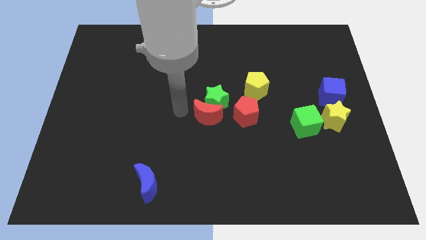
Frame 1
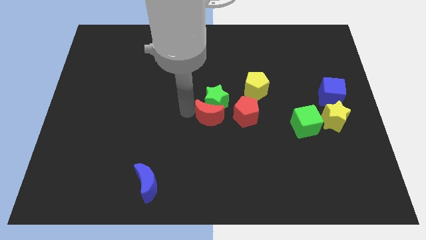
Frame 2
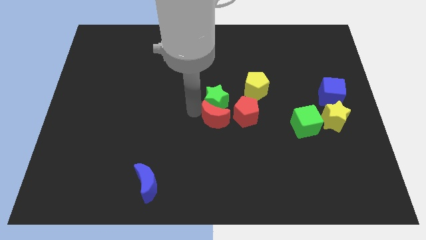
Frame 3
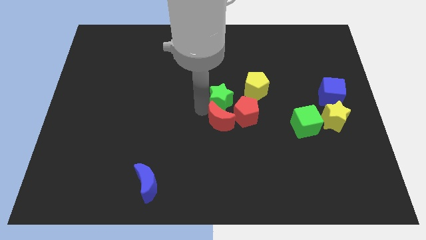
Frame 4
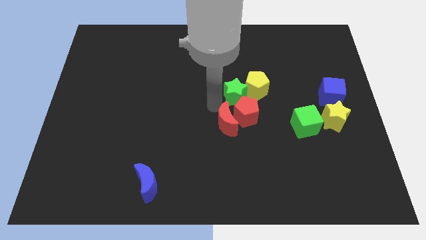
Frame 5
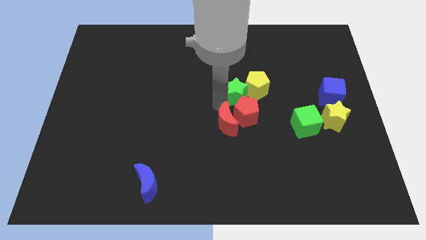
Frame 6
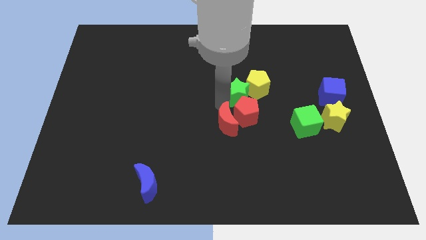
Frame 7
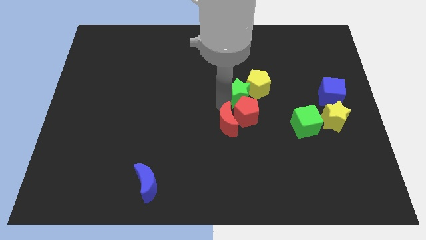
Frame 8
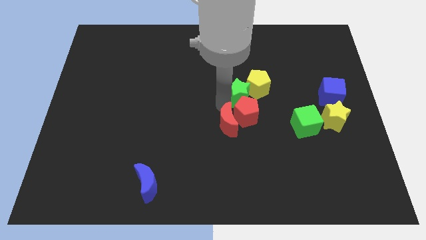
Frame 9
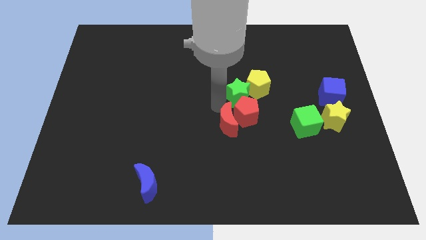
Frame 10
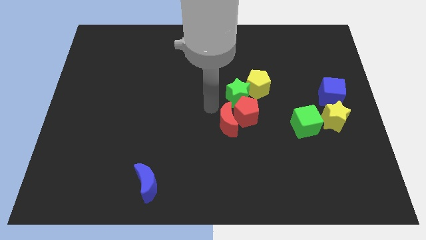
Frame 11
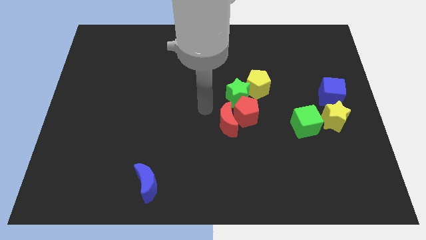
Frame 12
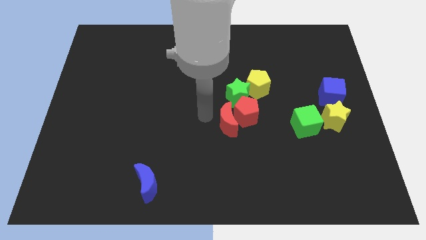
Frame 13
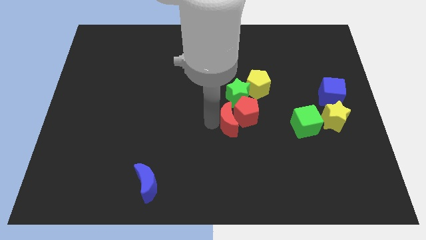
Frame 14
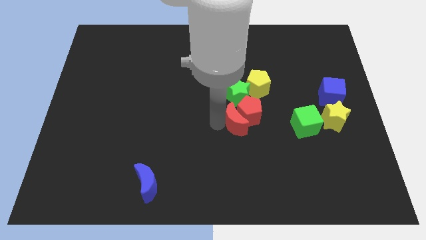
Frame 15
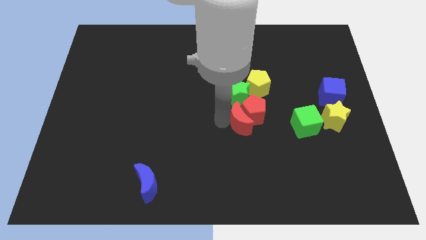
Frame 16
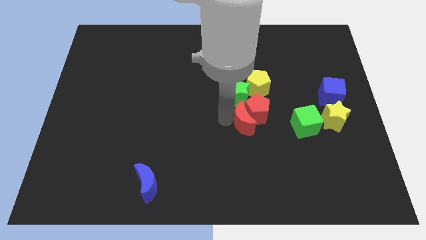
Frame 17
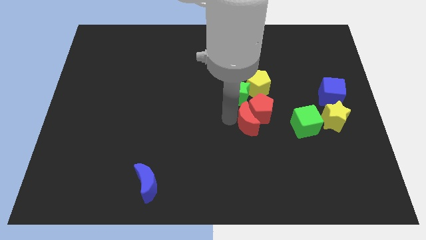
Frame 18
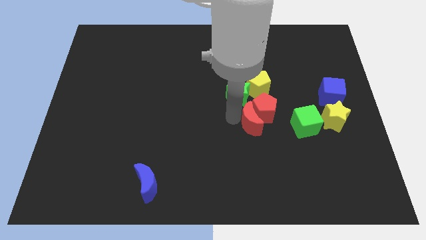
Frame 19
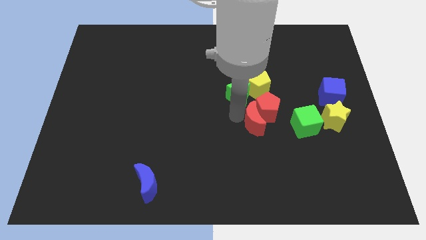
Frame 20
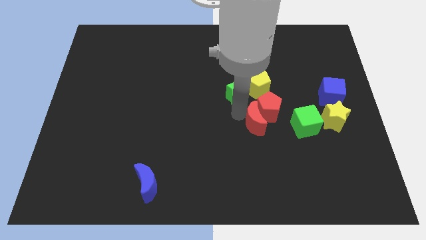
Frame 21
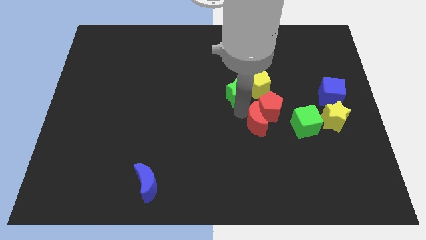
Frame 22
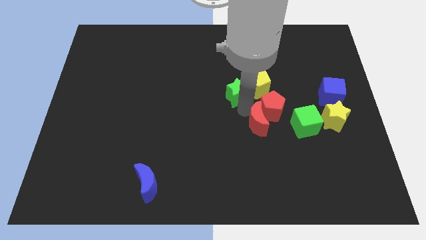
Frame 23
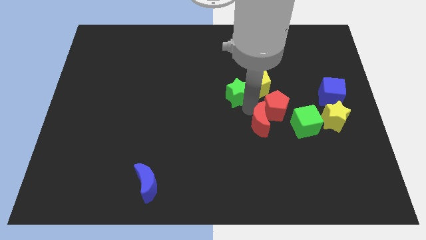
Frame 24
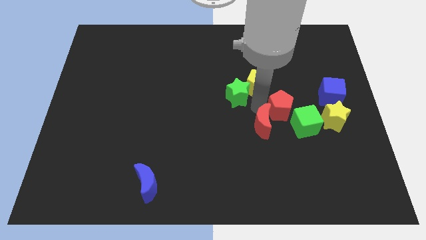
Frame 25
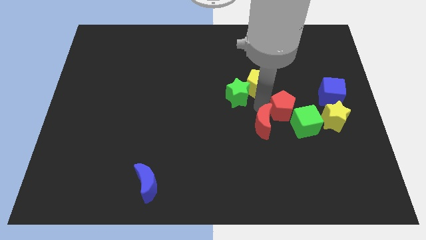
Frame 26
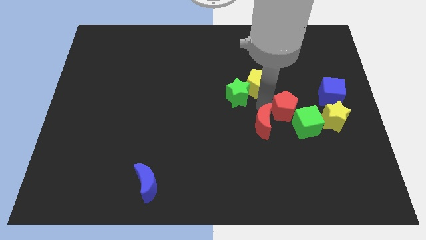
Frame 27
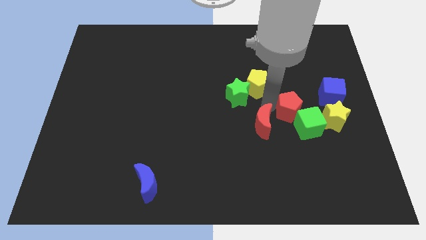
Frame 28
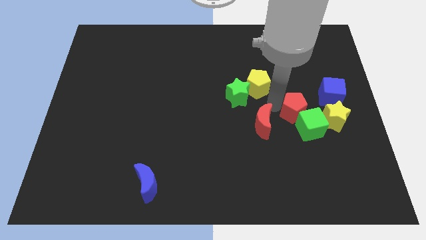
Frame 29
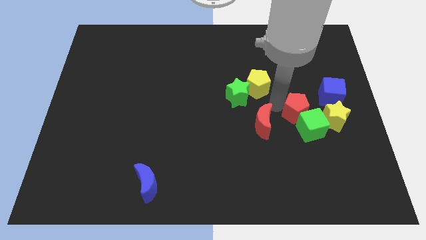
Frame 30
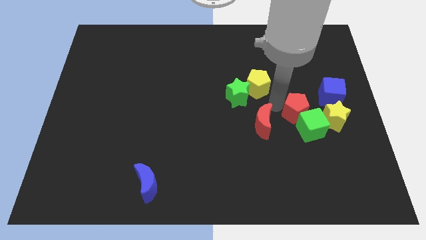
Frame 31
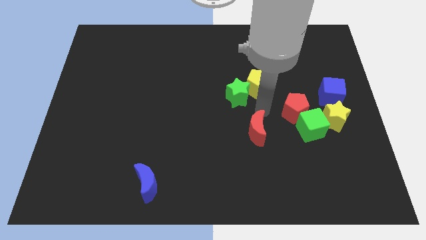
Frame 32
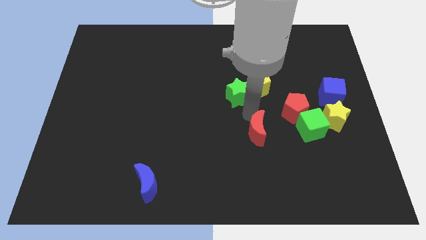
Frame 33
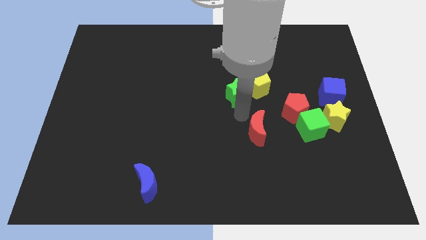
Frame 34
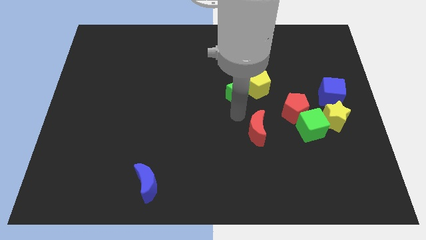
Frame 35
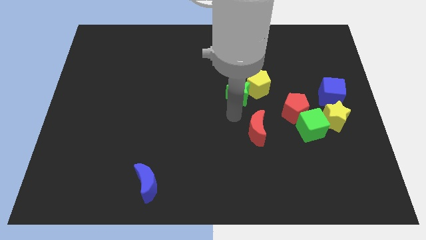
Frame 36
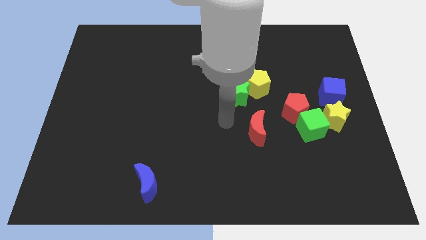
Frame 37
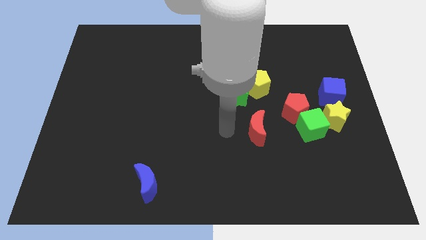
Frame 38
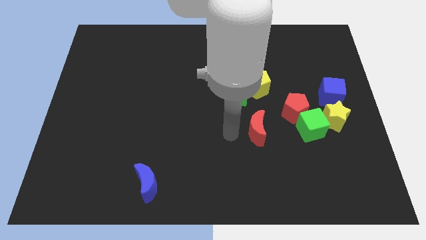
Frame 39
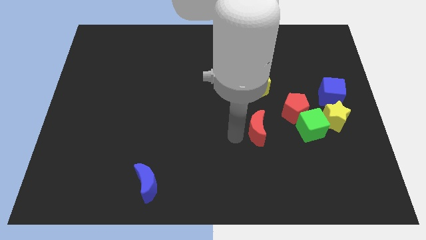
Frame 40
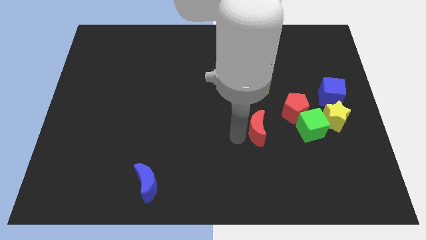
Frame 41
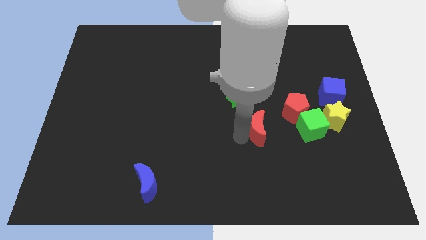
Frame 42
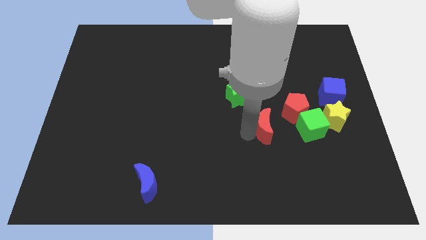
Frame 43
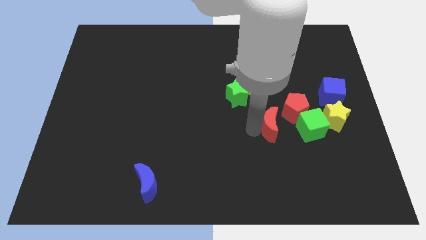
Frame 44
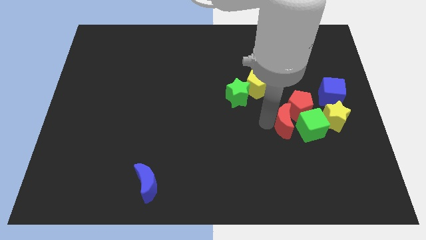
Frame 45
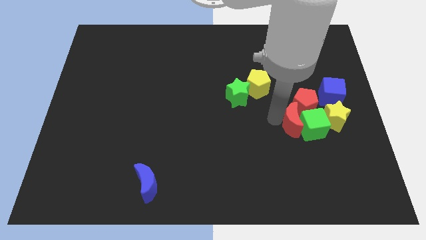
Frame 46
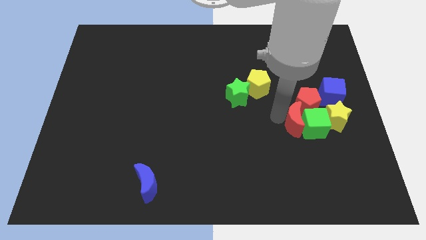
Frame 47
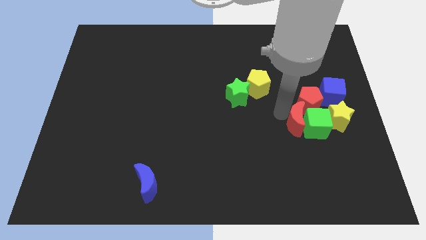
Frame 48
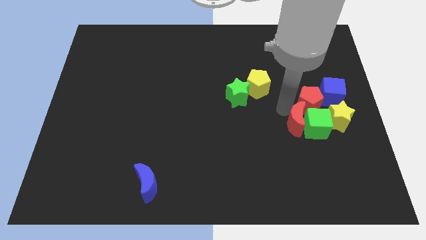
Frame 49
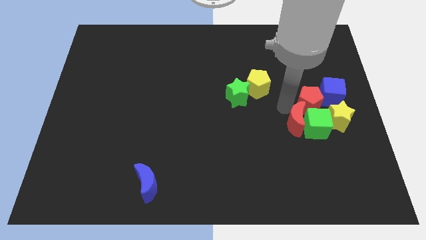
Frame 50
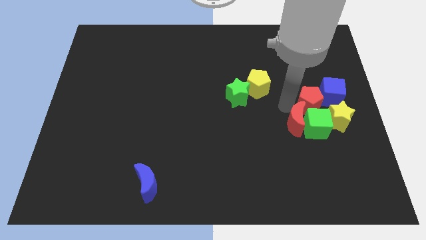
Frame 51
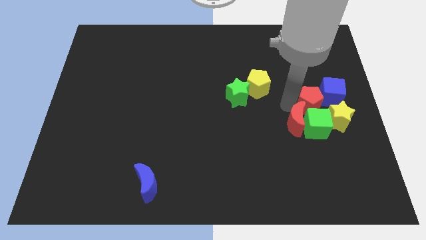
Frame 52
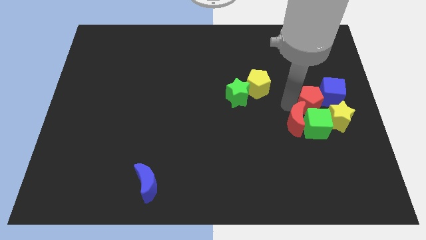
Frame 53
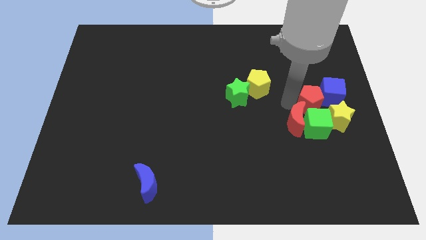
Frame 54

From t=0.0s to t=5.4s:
move the red blocks towards the group of blocks

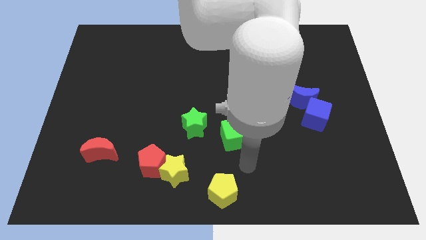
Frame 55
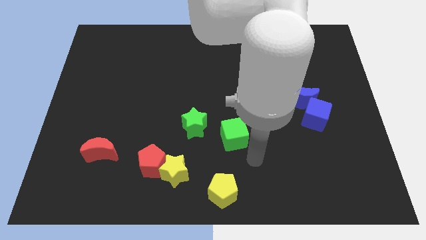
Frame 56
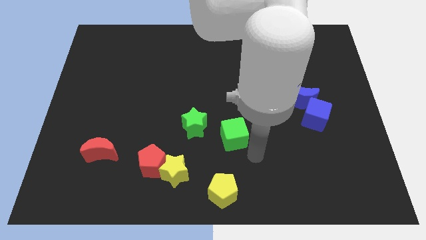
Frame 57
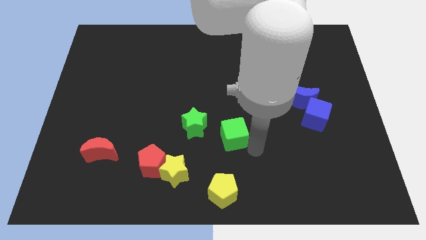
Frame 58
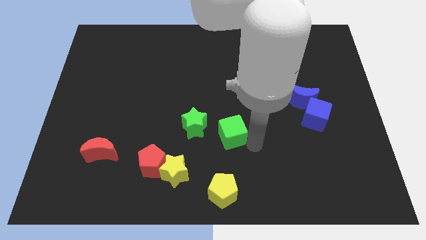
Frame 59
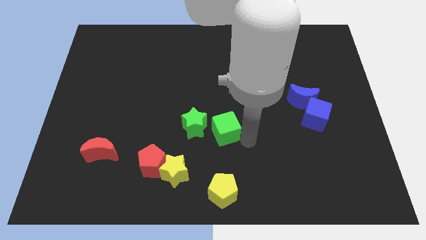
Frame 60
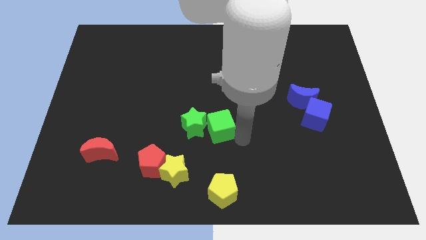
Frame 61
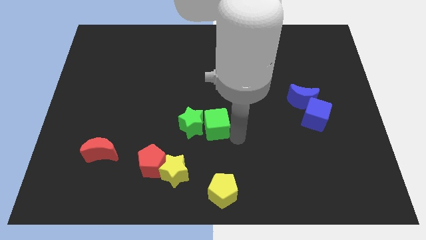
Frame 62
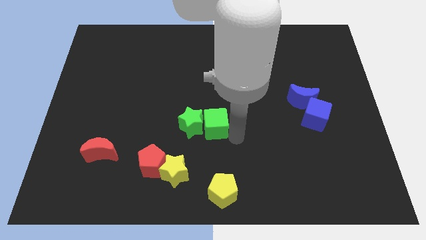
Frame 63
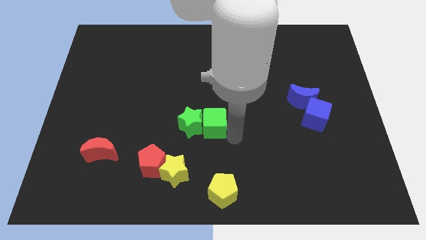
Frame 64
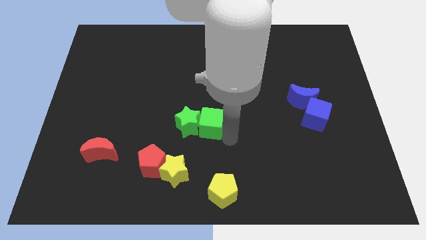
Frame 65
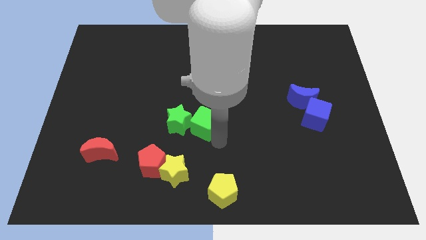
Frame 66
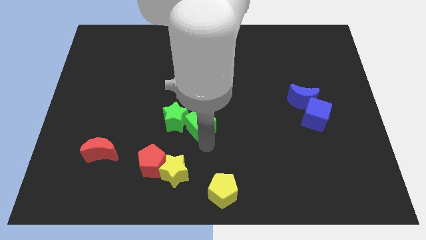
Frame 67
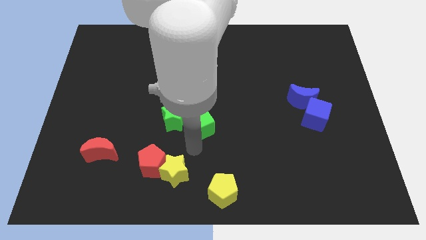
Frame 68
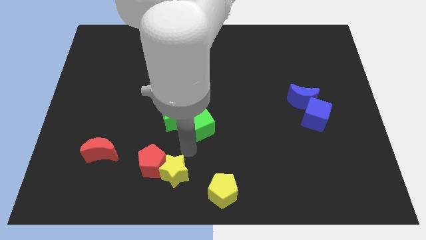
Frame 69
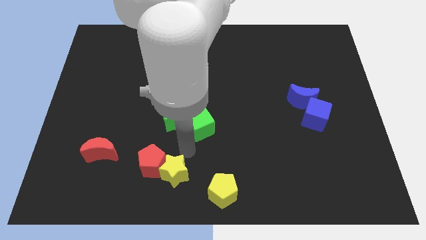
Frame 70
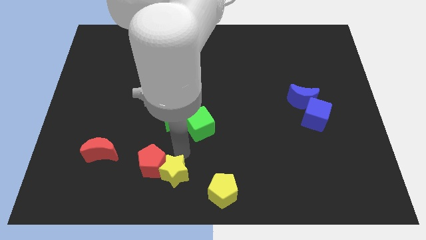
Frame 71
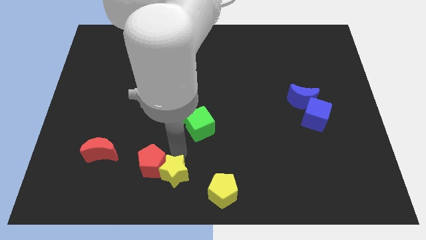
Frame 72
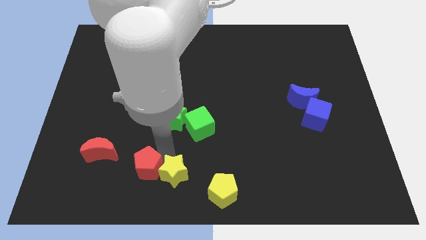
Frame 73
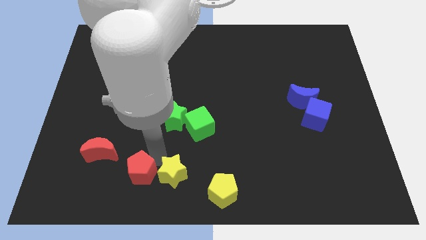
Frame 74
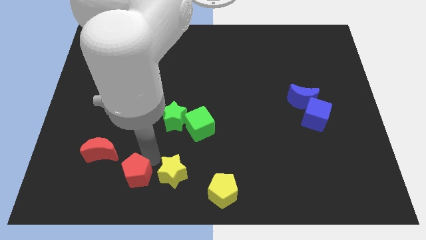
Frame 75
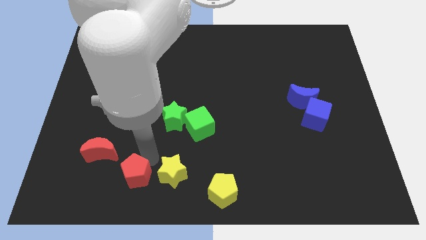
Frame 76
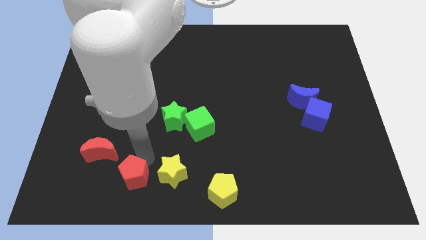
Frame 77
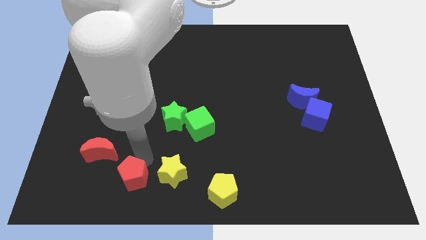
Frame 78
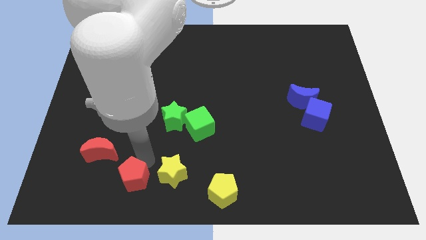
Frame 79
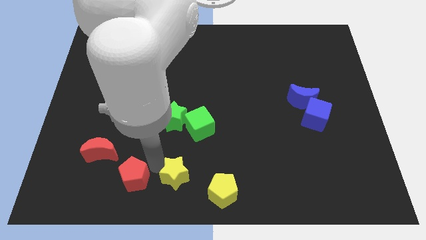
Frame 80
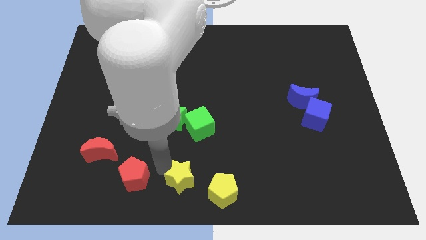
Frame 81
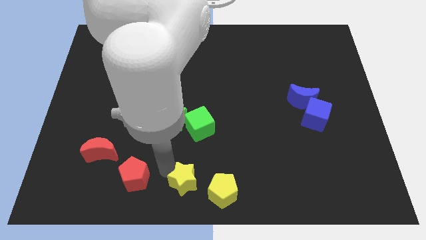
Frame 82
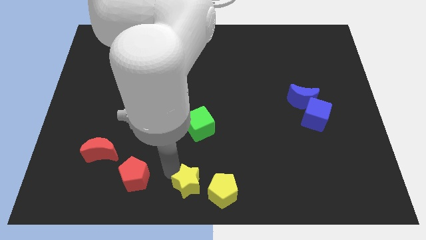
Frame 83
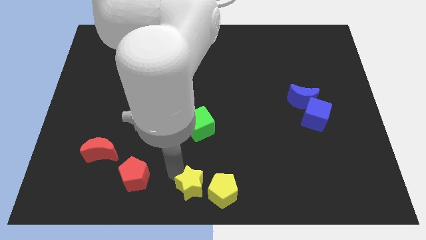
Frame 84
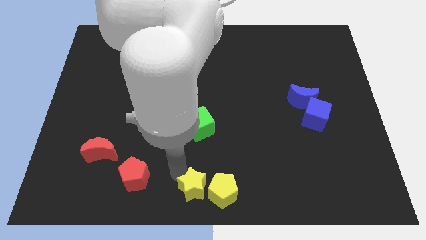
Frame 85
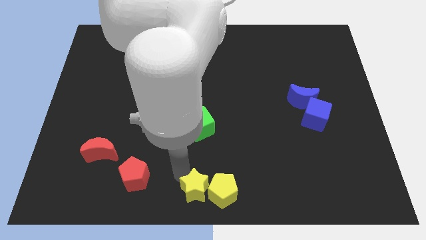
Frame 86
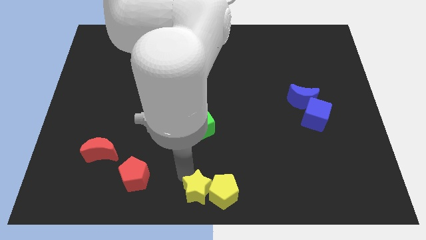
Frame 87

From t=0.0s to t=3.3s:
place the green and yellow blocks separately
